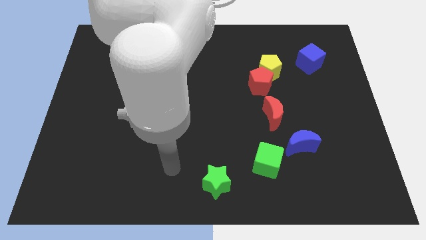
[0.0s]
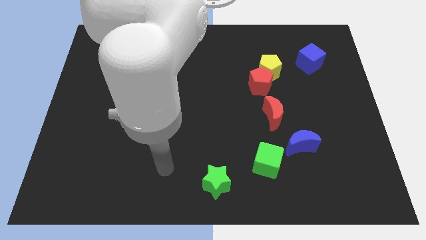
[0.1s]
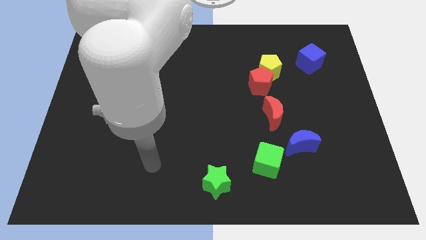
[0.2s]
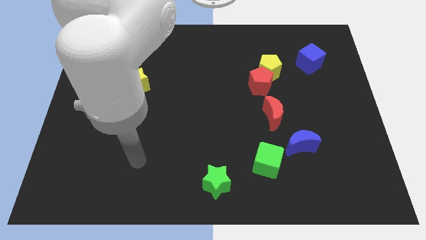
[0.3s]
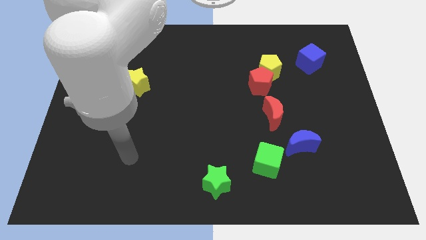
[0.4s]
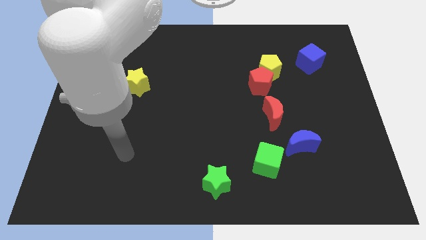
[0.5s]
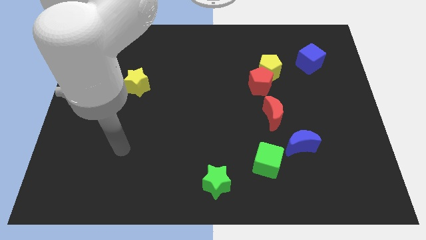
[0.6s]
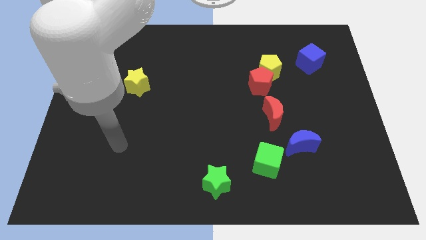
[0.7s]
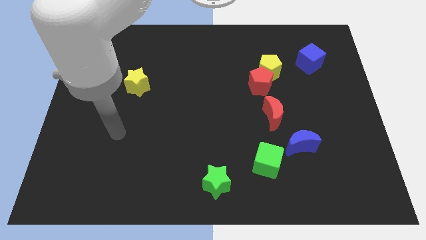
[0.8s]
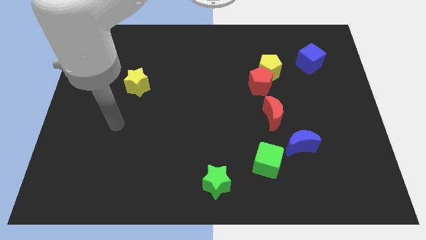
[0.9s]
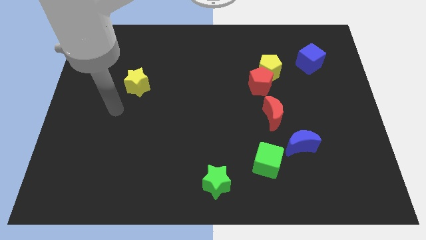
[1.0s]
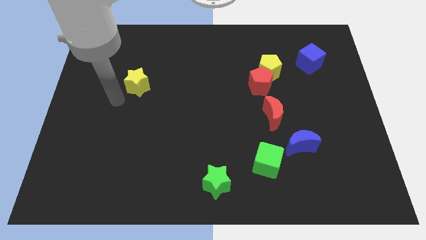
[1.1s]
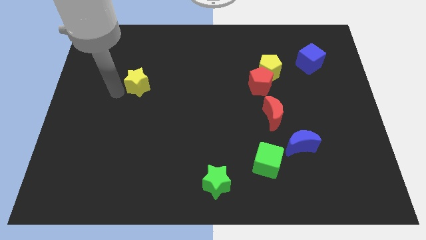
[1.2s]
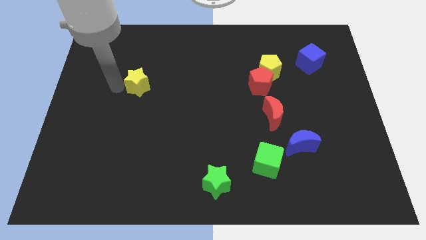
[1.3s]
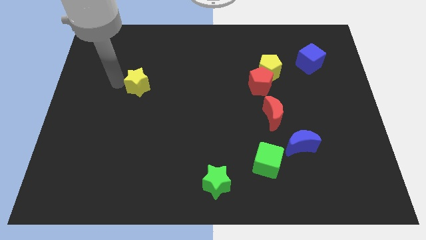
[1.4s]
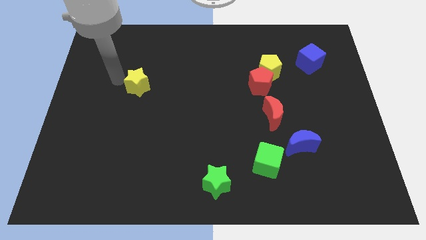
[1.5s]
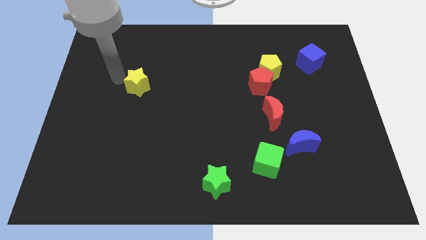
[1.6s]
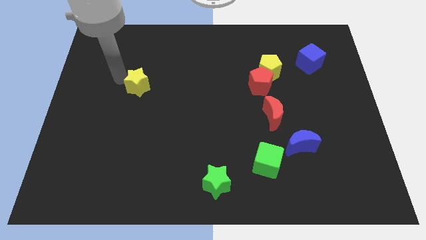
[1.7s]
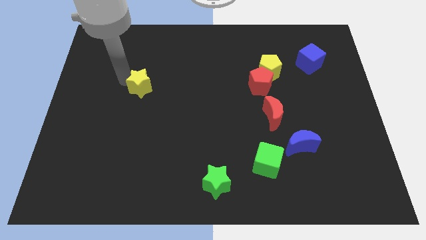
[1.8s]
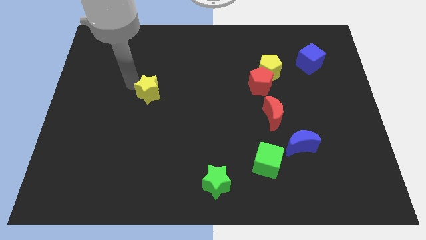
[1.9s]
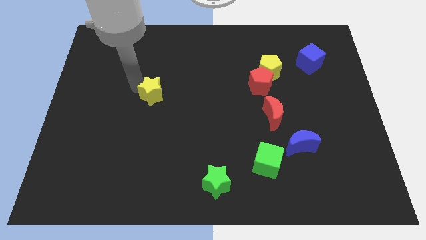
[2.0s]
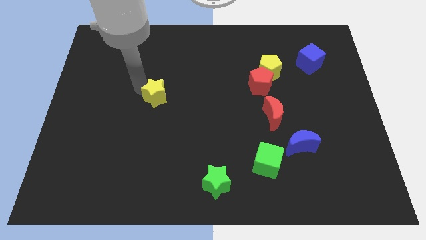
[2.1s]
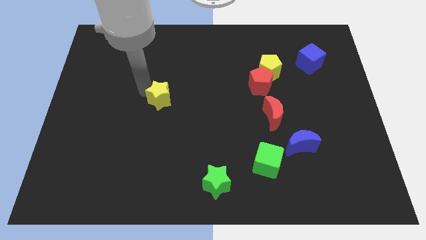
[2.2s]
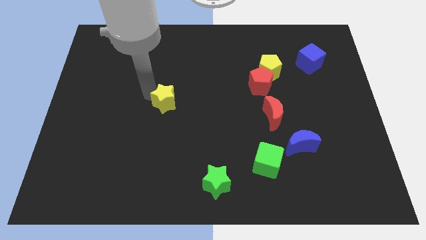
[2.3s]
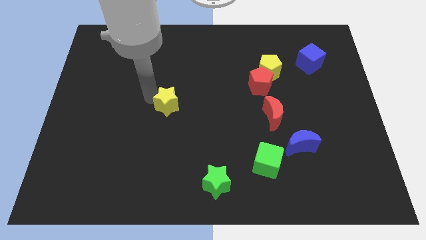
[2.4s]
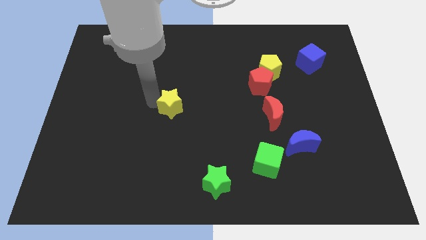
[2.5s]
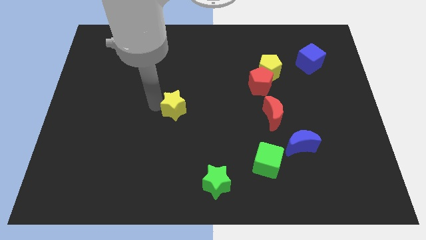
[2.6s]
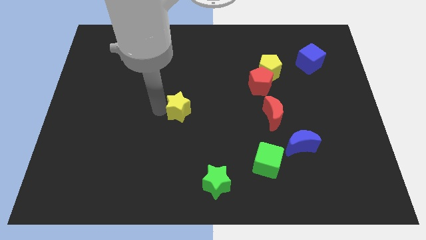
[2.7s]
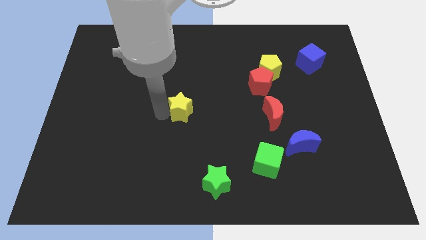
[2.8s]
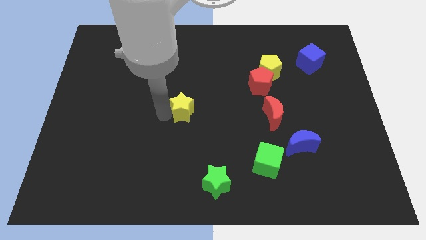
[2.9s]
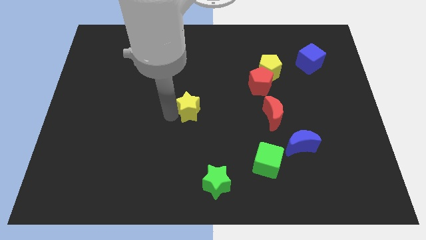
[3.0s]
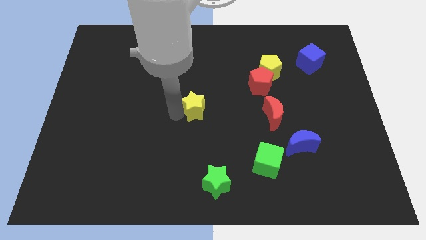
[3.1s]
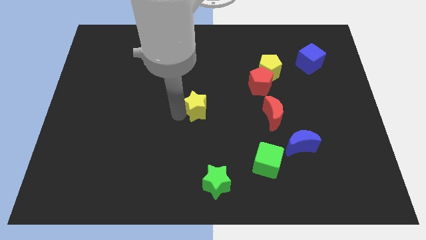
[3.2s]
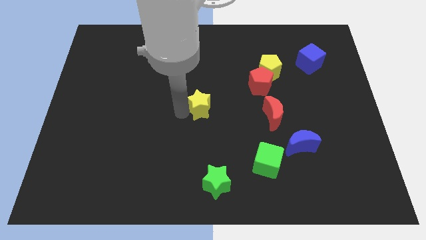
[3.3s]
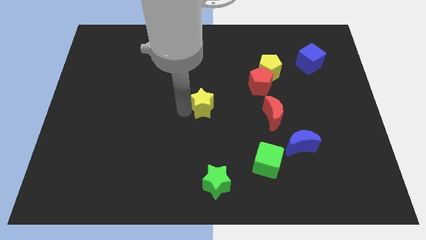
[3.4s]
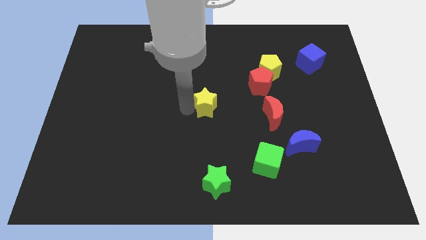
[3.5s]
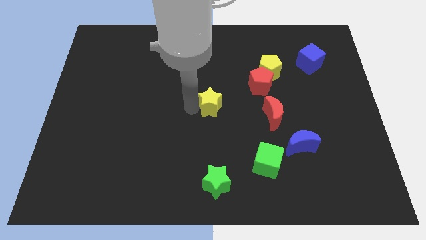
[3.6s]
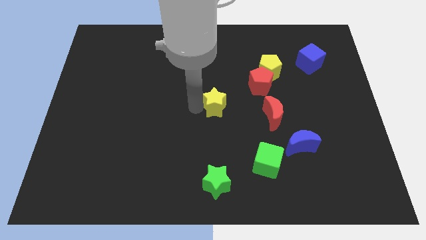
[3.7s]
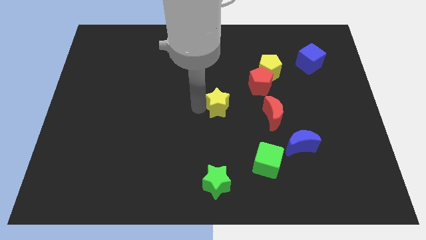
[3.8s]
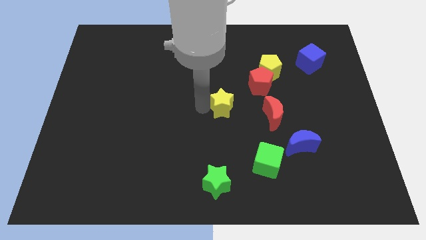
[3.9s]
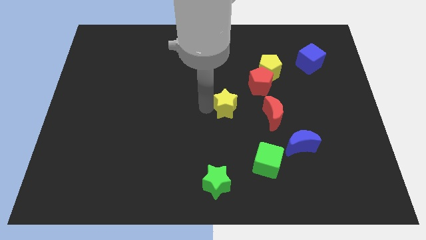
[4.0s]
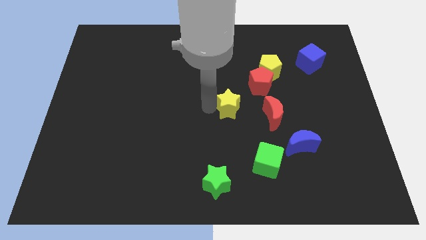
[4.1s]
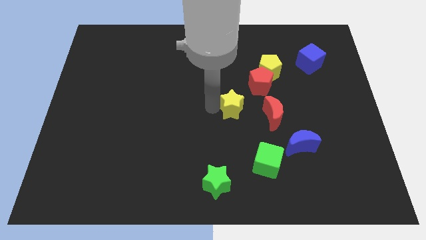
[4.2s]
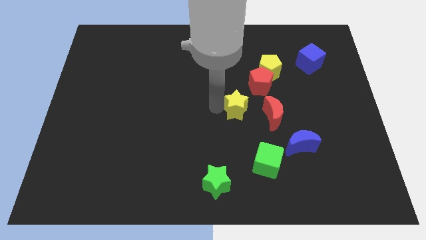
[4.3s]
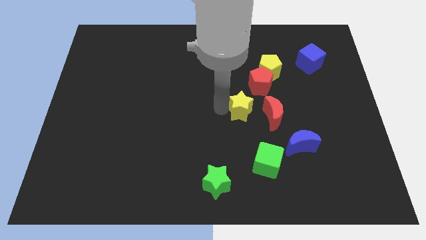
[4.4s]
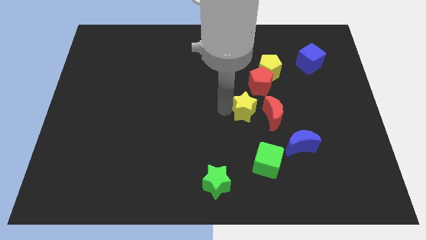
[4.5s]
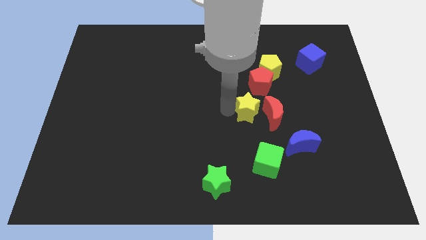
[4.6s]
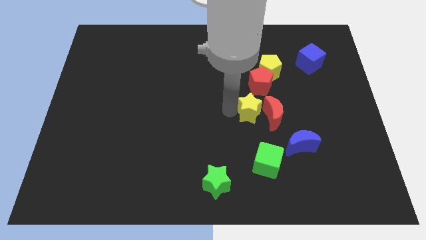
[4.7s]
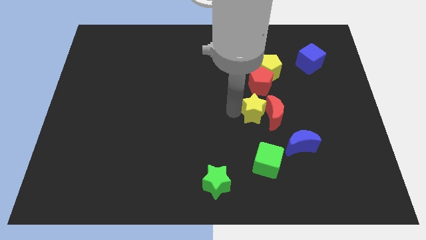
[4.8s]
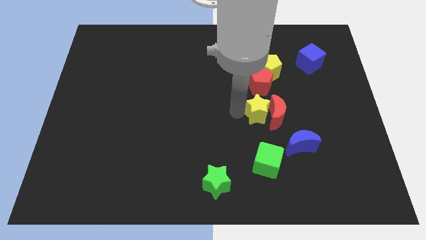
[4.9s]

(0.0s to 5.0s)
put the yellow star next to the red moon

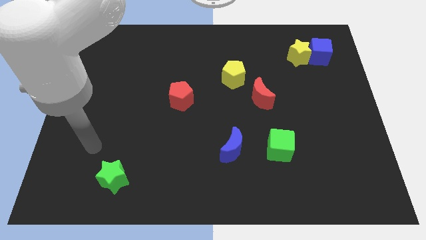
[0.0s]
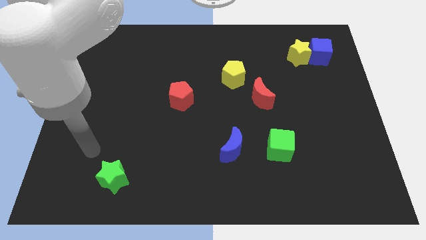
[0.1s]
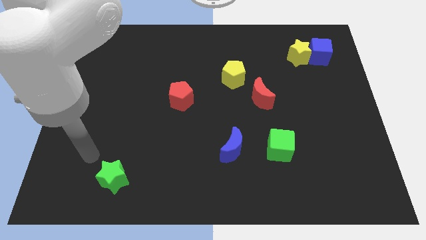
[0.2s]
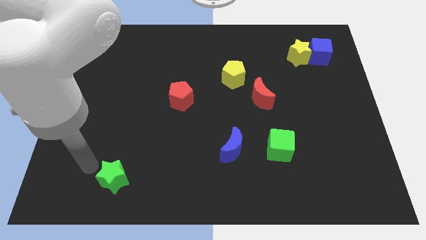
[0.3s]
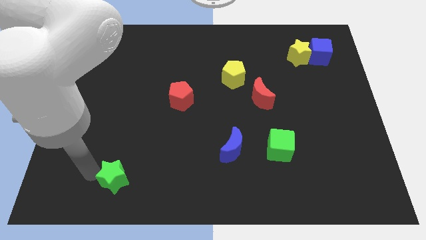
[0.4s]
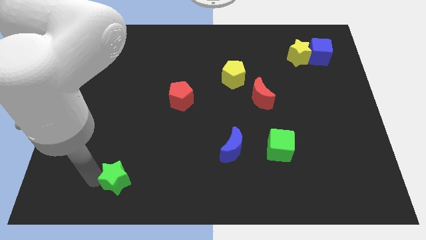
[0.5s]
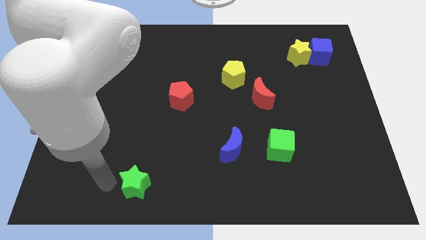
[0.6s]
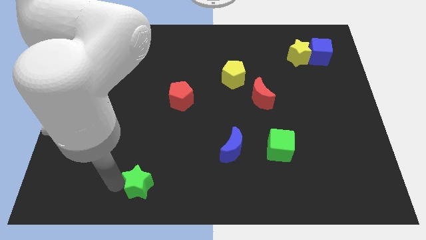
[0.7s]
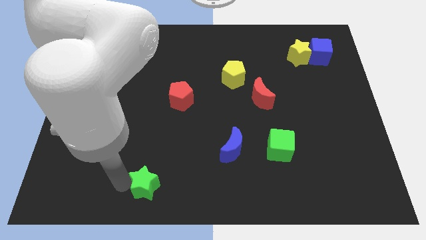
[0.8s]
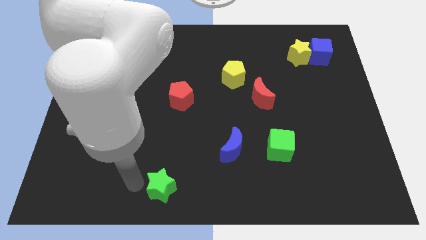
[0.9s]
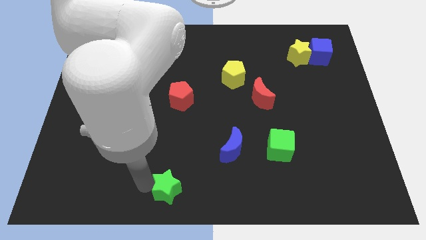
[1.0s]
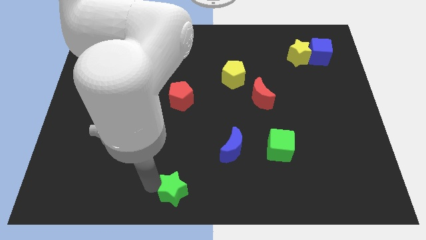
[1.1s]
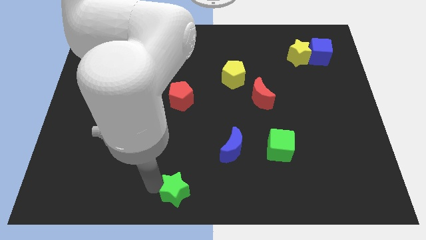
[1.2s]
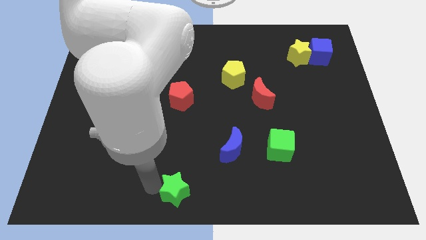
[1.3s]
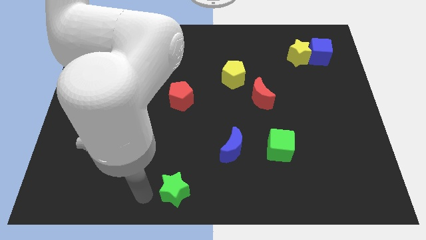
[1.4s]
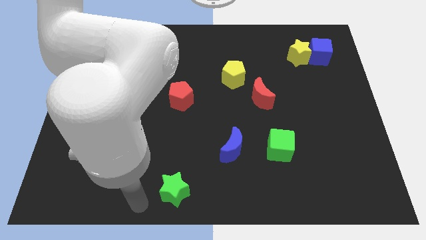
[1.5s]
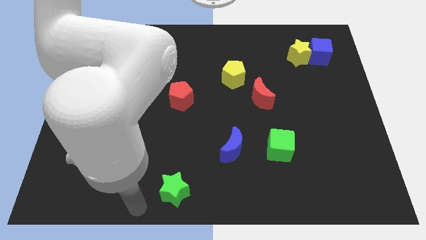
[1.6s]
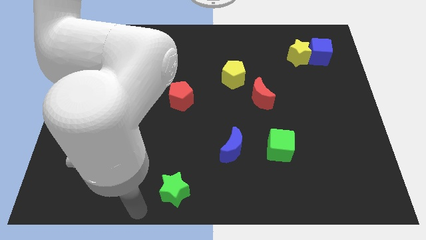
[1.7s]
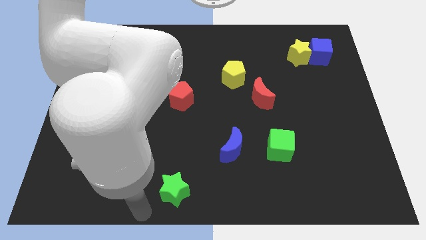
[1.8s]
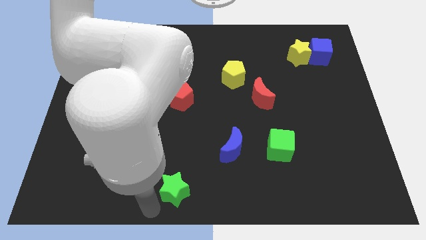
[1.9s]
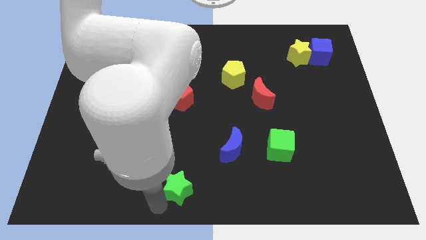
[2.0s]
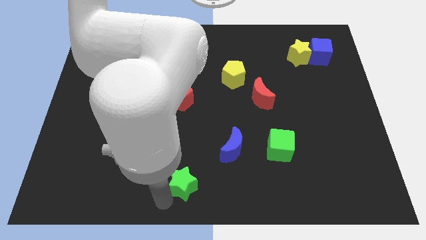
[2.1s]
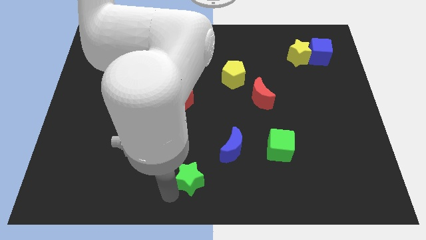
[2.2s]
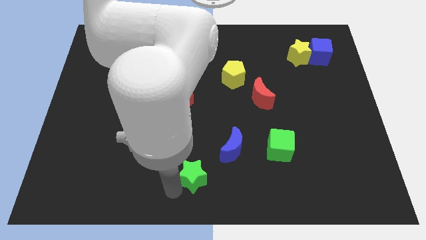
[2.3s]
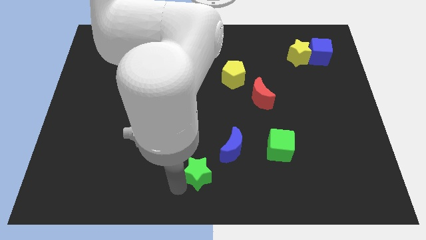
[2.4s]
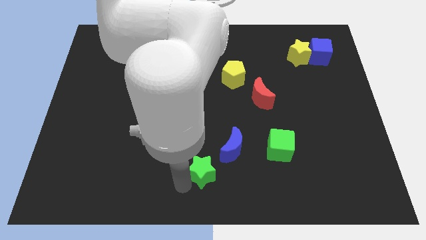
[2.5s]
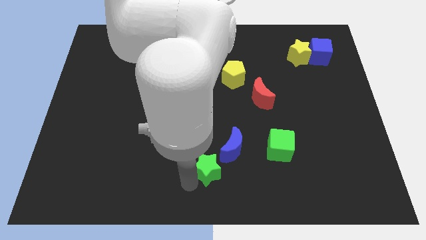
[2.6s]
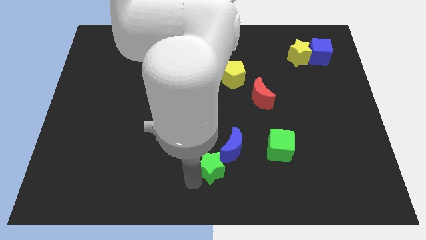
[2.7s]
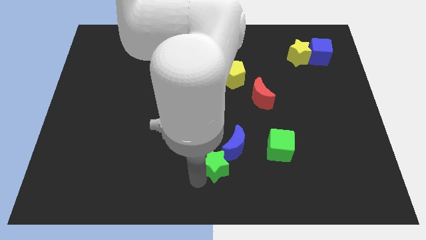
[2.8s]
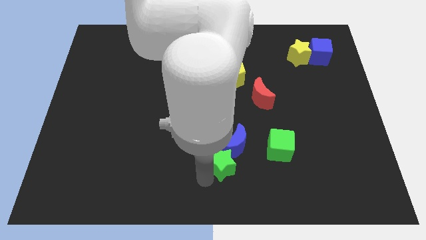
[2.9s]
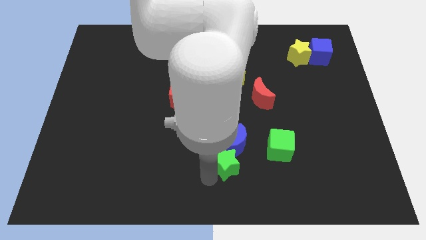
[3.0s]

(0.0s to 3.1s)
slide the green star towards the blue moon

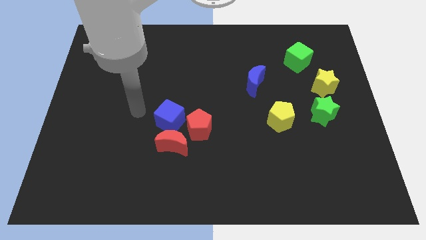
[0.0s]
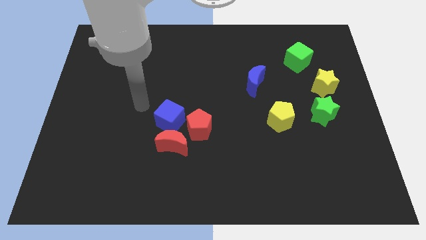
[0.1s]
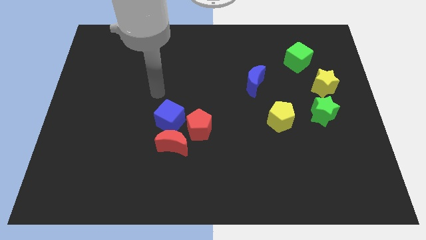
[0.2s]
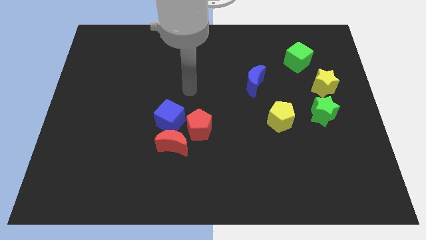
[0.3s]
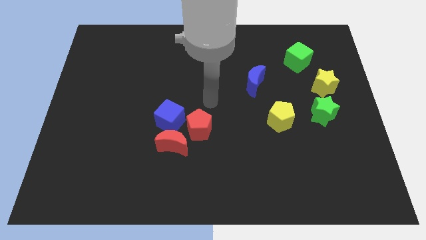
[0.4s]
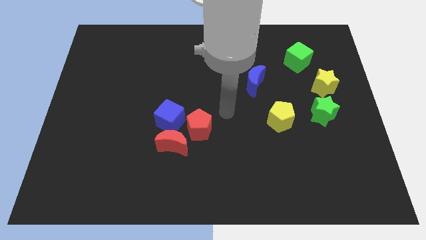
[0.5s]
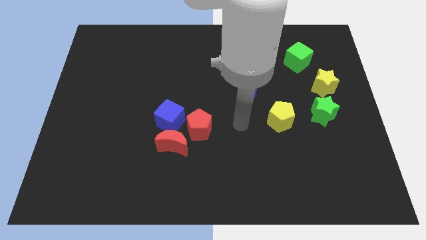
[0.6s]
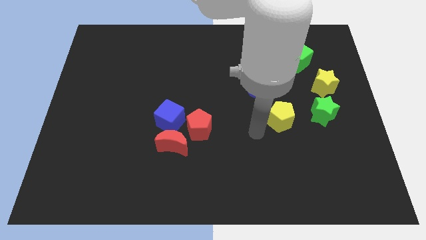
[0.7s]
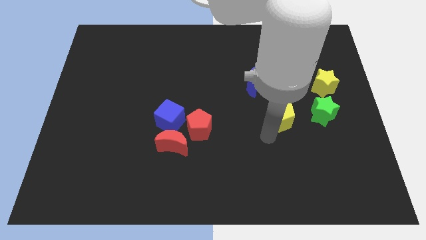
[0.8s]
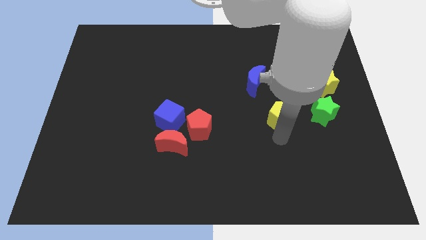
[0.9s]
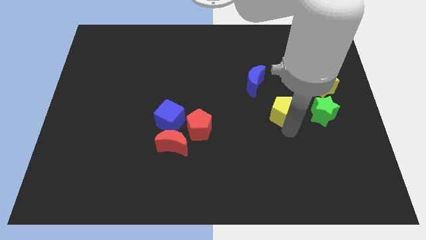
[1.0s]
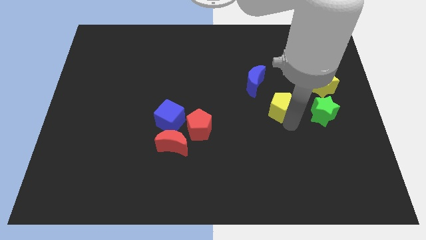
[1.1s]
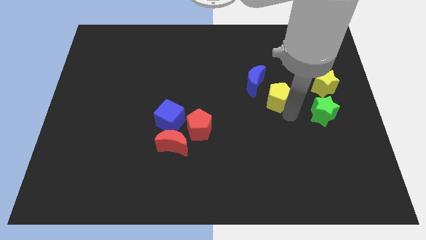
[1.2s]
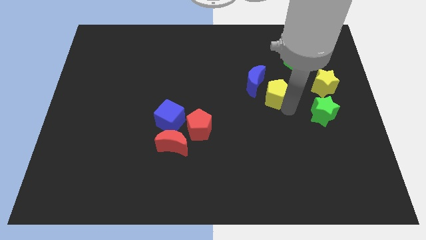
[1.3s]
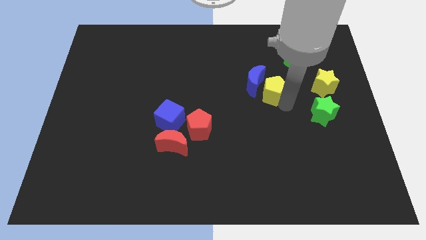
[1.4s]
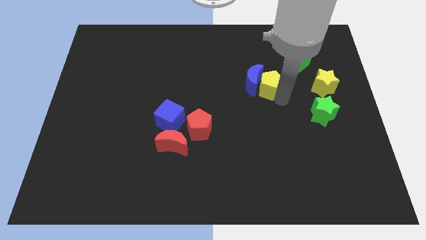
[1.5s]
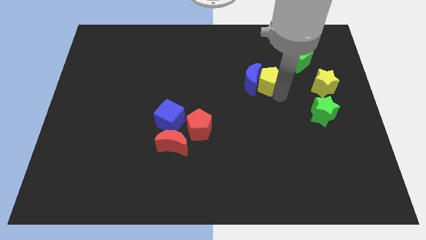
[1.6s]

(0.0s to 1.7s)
push the yellow pentagon close to the blue moon
